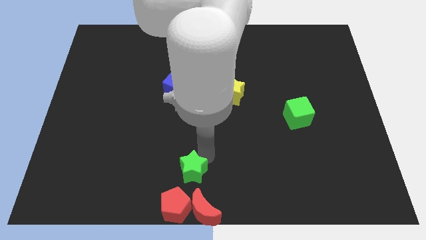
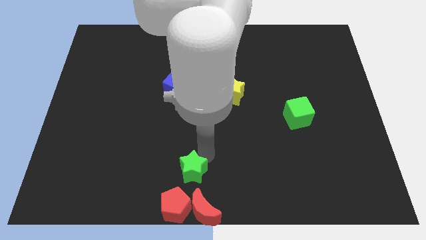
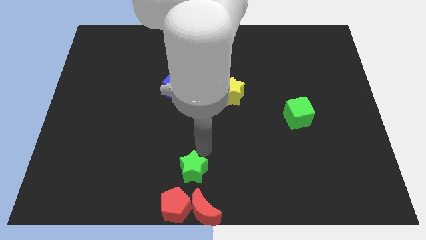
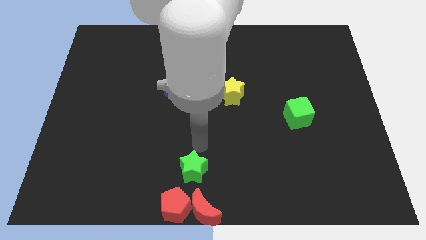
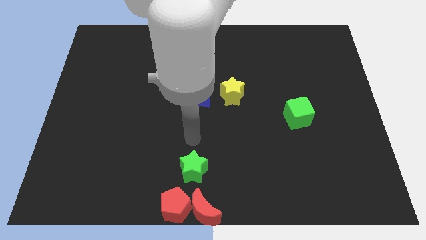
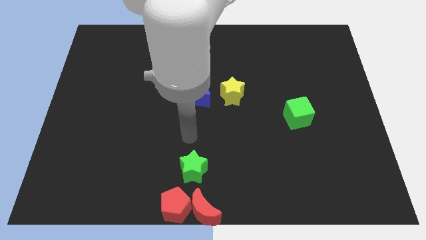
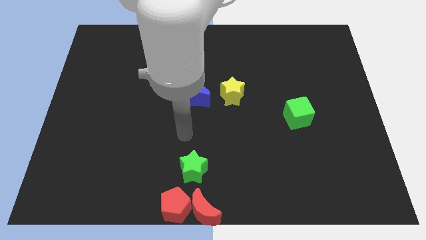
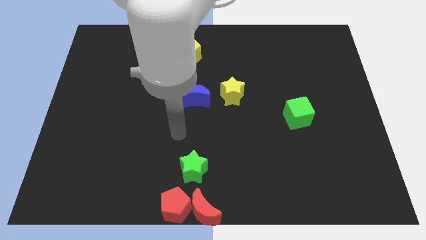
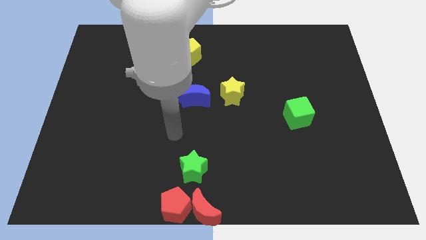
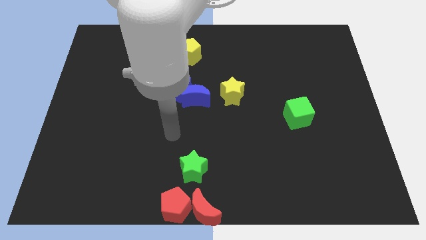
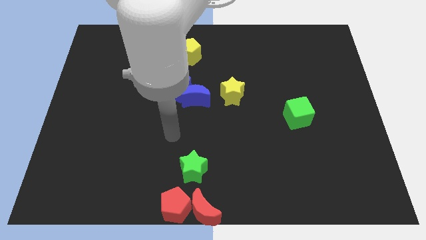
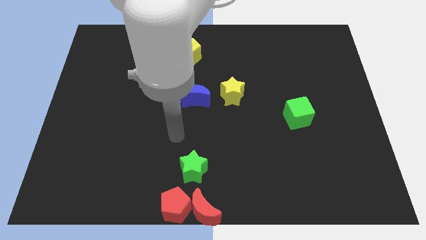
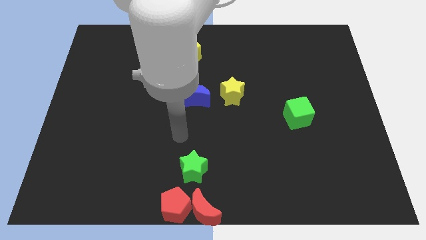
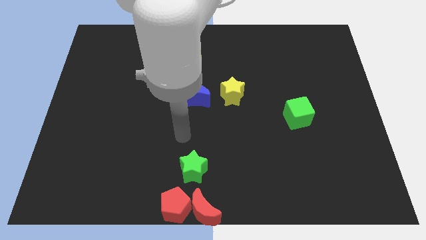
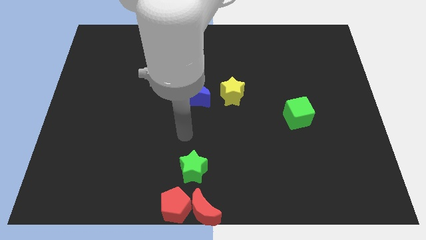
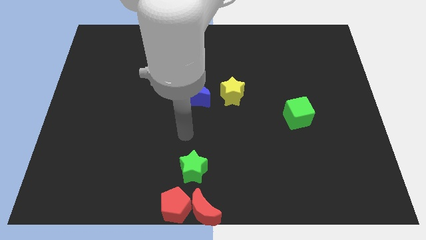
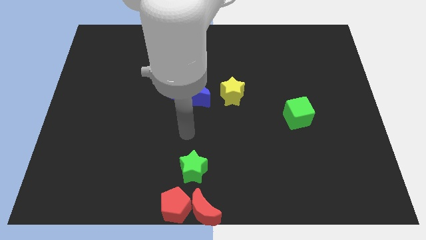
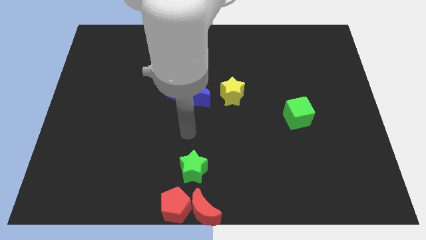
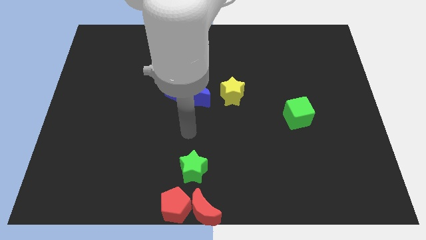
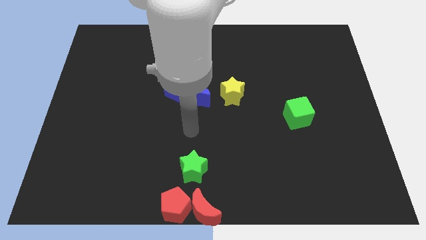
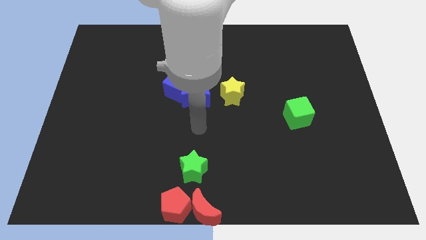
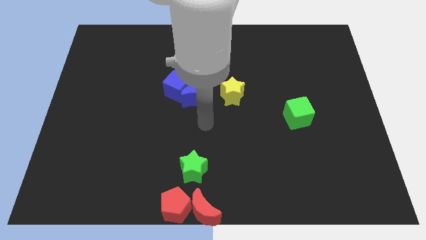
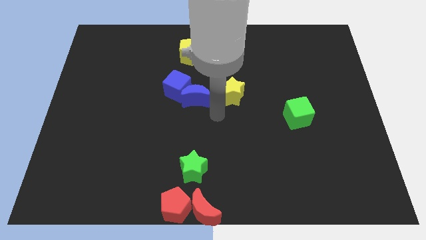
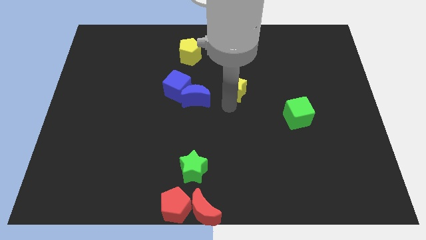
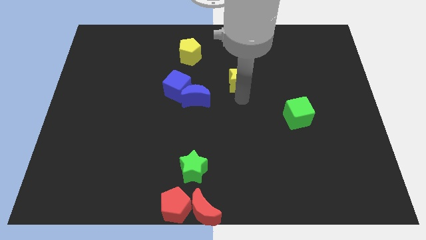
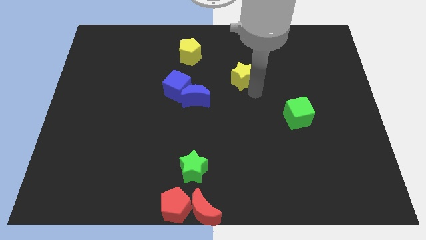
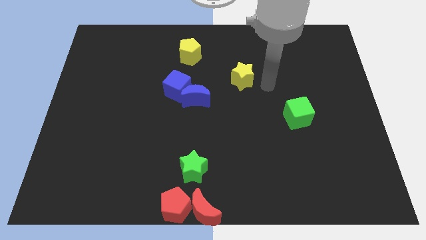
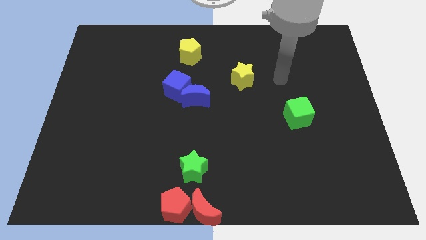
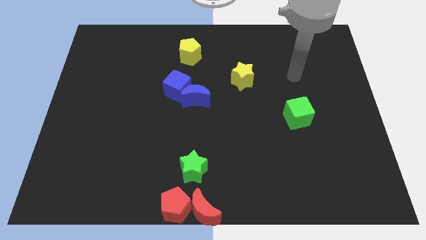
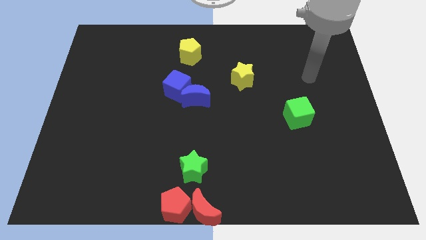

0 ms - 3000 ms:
slightly push the yellow star between green cube and yellow pentagon

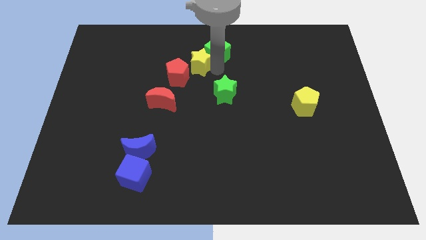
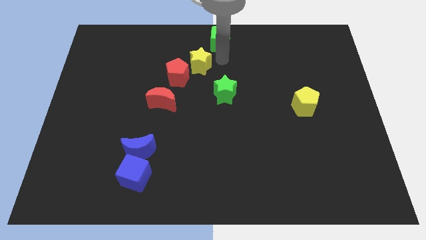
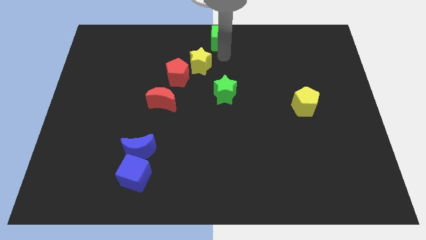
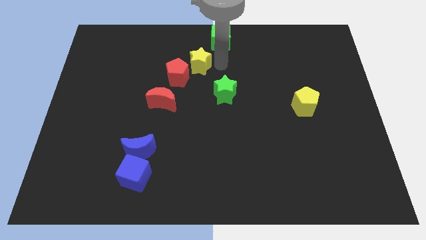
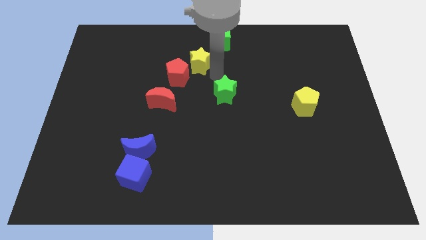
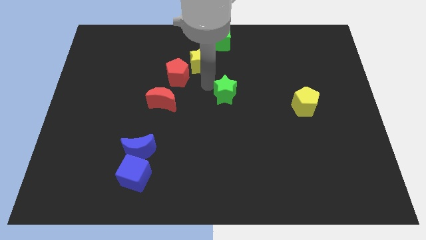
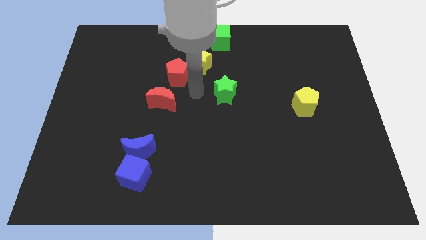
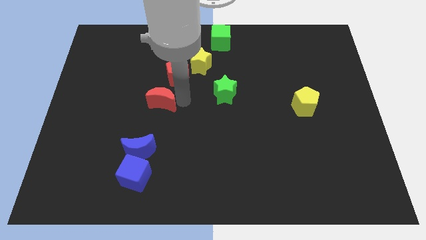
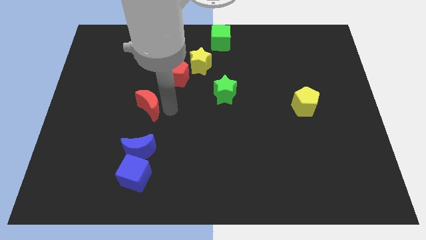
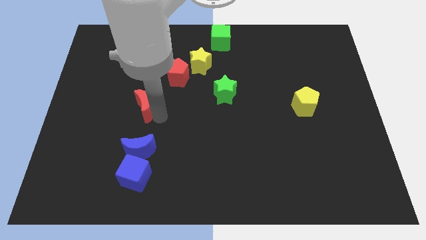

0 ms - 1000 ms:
move your arm away from the green cube

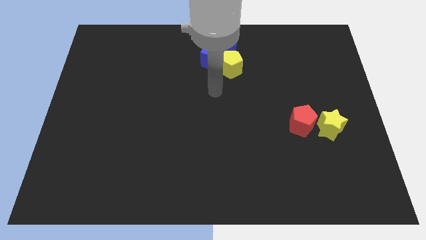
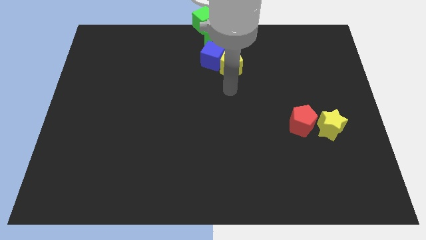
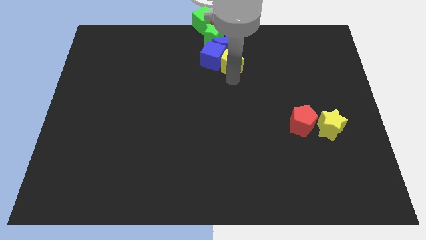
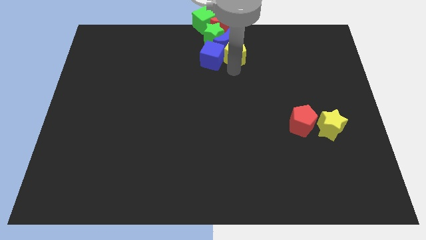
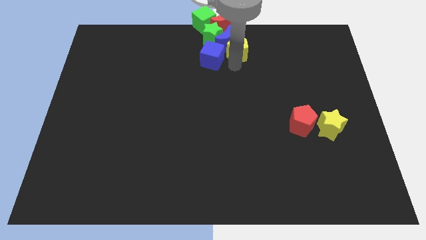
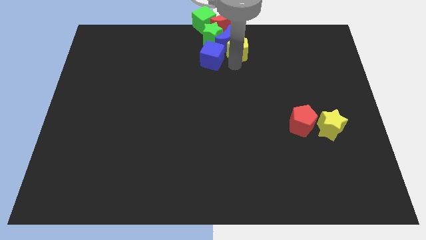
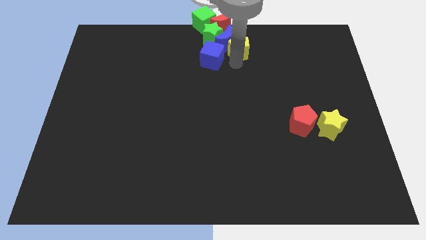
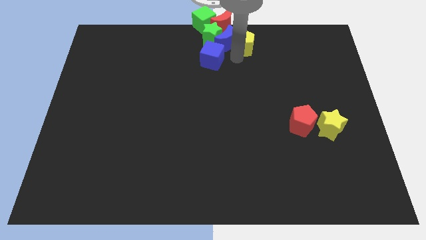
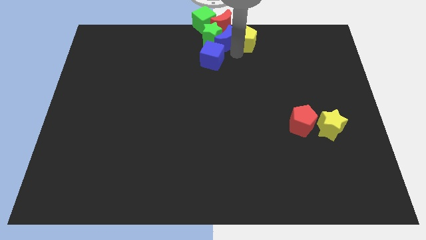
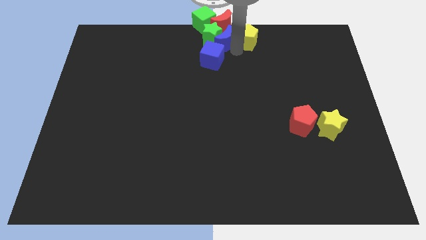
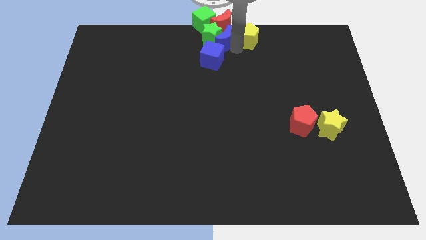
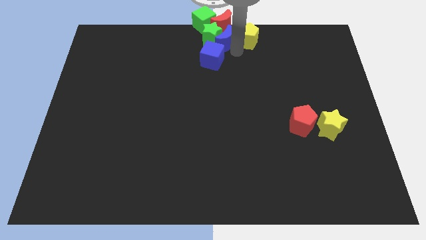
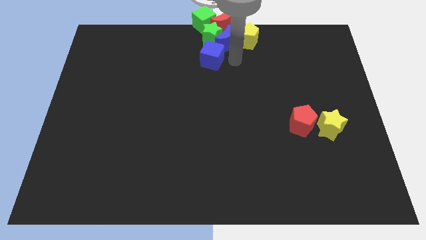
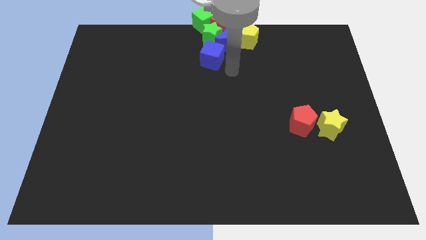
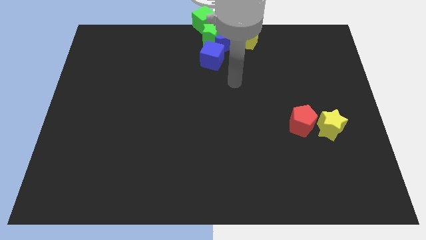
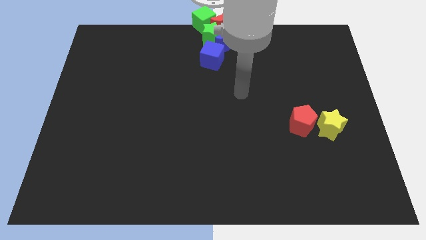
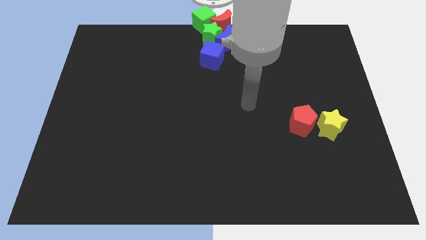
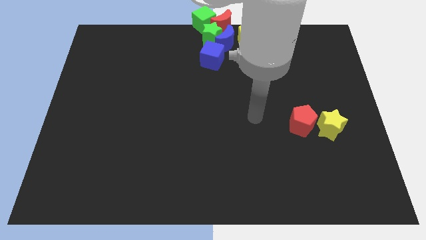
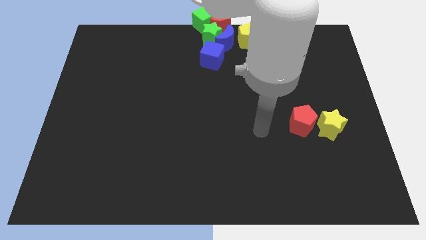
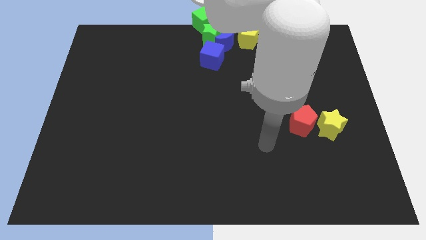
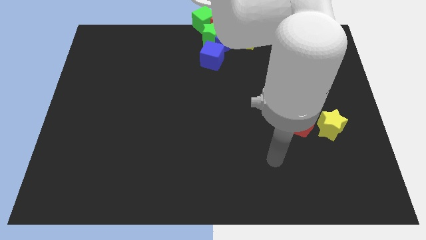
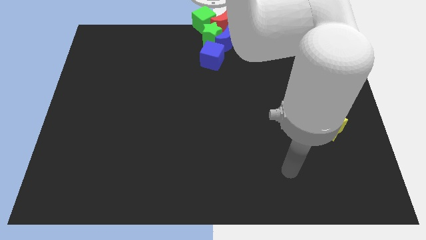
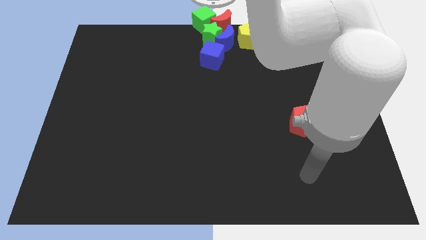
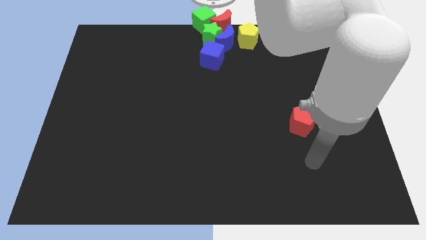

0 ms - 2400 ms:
place the yellow pentagon at the right side of the blue crescent

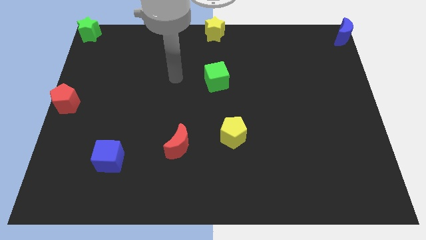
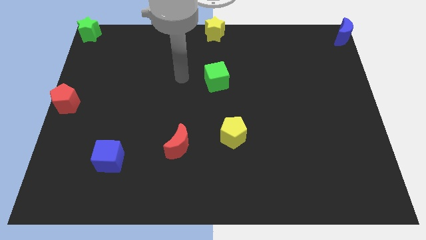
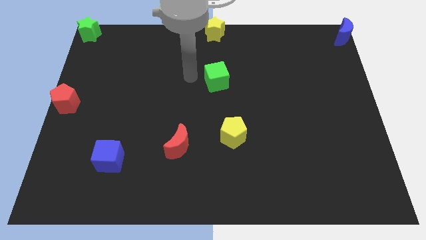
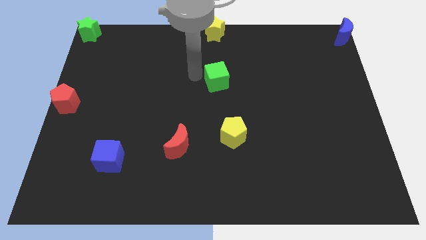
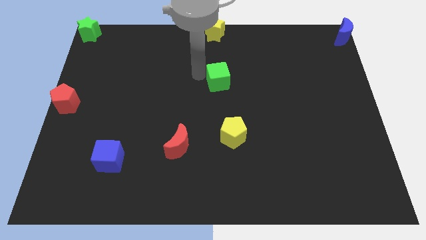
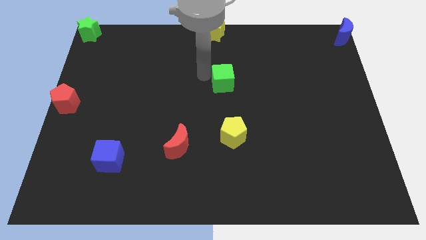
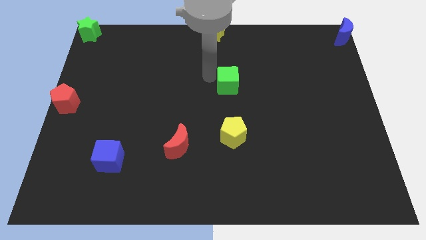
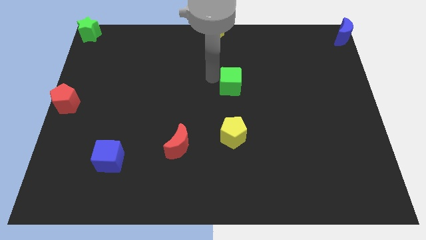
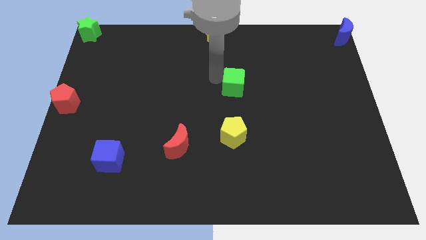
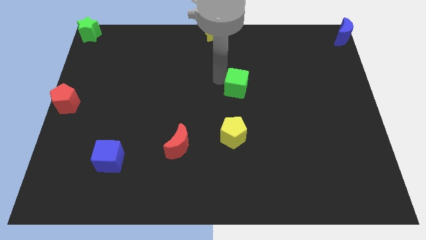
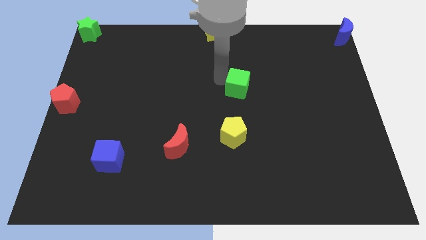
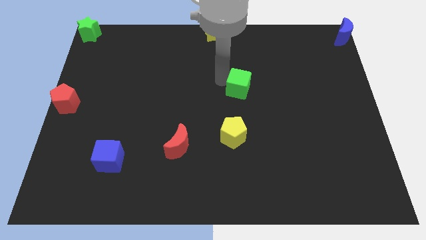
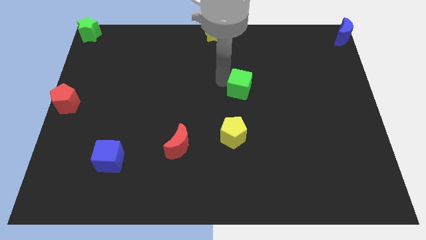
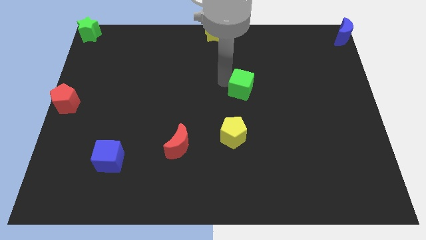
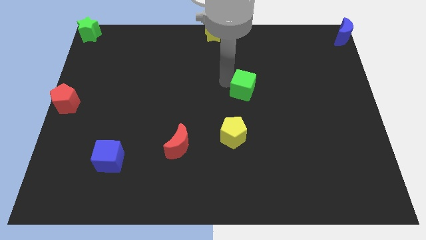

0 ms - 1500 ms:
slight push green cube from center of the board

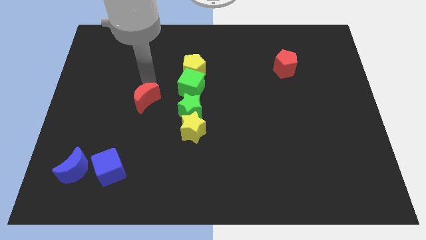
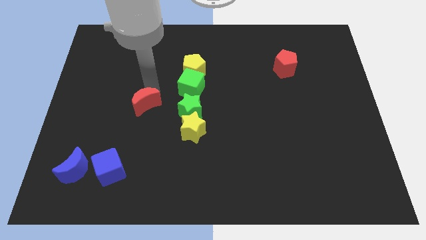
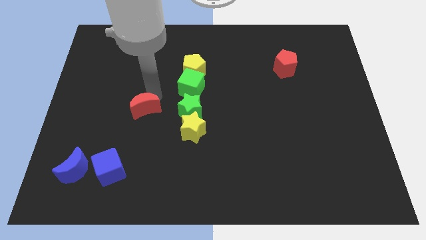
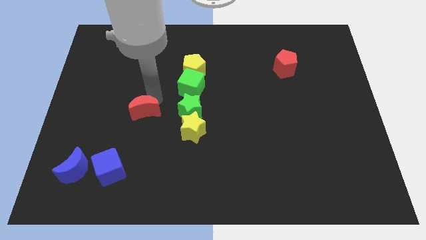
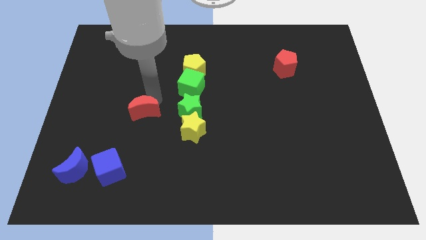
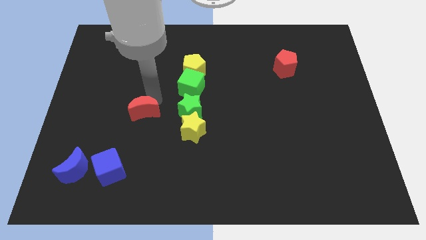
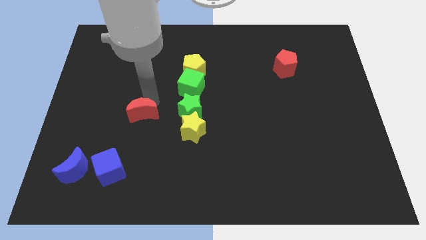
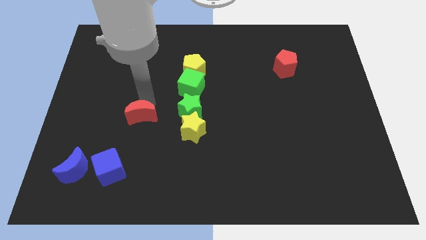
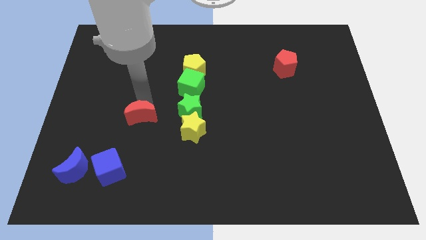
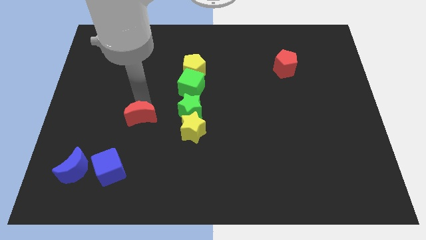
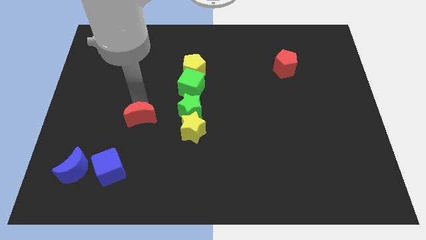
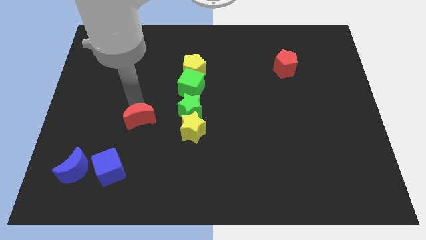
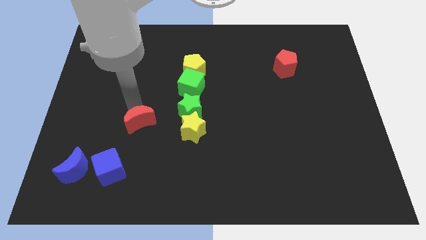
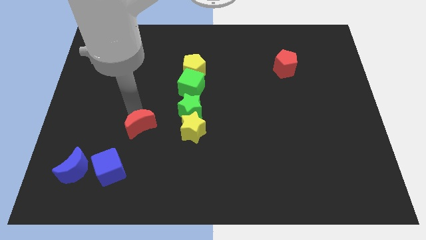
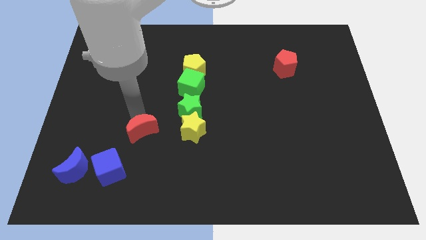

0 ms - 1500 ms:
push red moon to the left of yellow star
